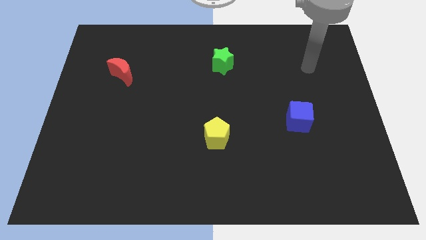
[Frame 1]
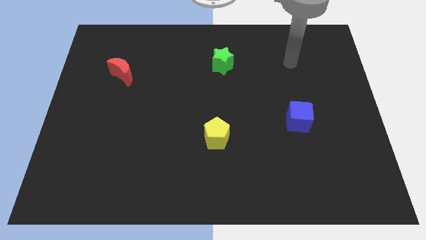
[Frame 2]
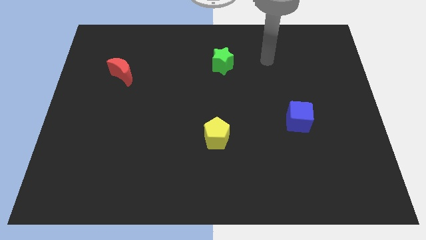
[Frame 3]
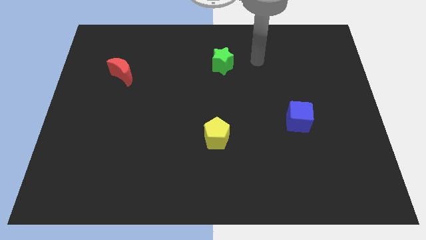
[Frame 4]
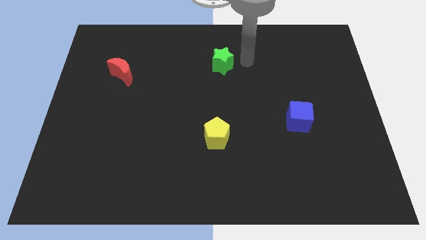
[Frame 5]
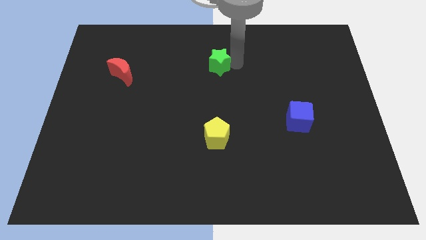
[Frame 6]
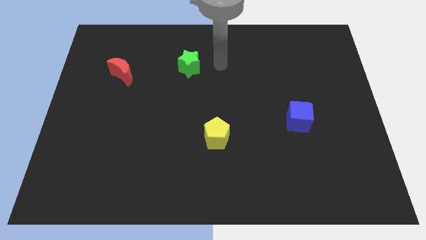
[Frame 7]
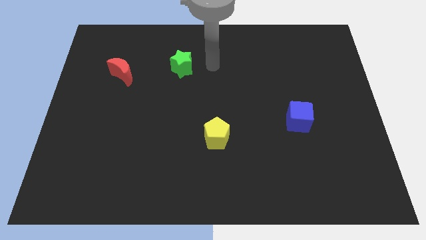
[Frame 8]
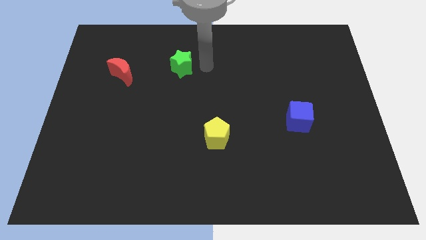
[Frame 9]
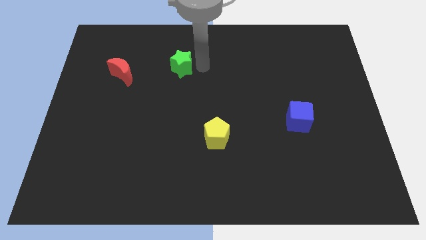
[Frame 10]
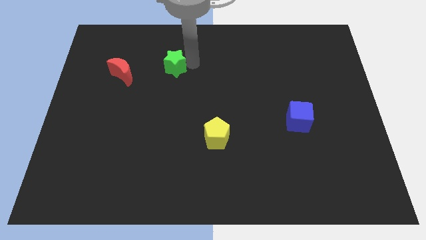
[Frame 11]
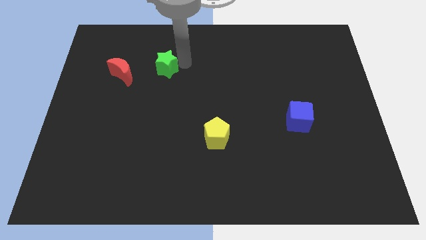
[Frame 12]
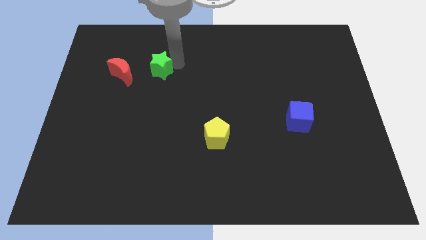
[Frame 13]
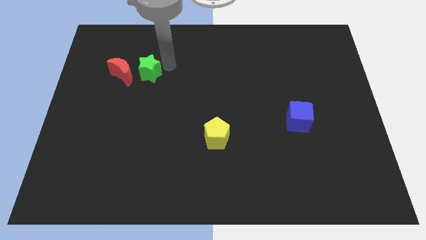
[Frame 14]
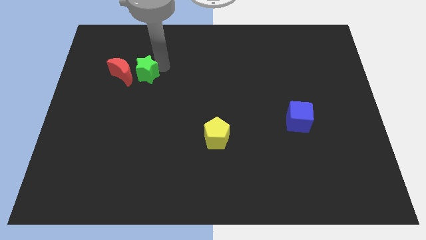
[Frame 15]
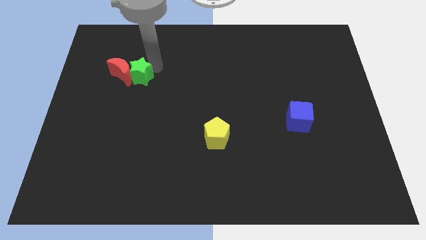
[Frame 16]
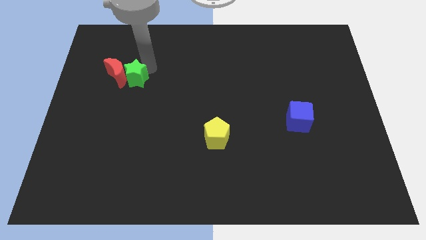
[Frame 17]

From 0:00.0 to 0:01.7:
slide the star close to the moon

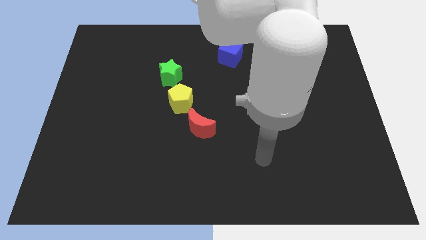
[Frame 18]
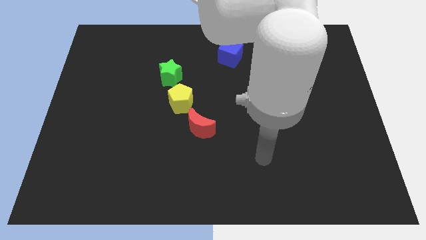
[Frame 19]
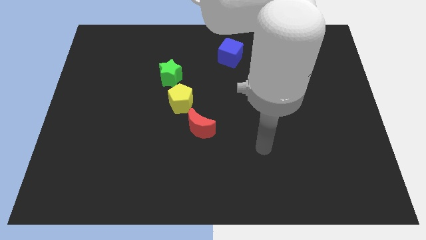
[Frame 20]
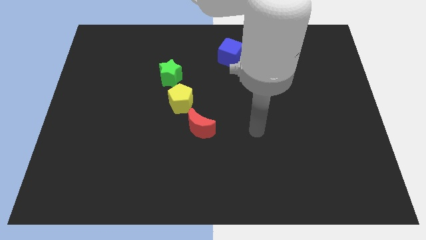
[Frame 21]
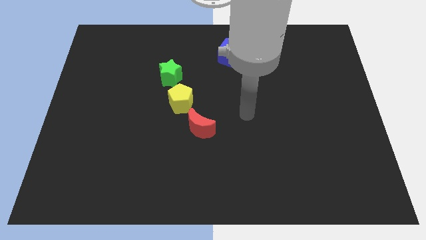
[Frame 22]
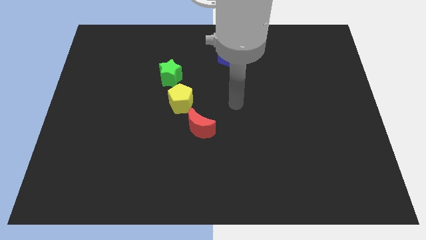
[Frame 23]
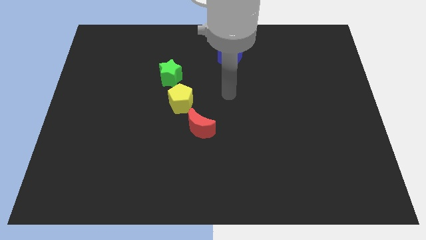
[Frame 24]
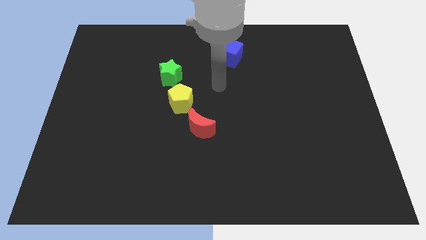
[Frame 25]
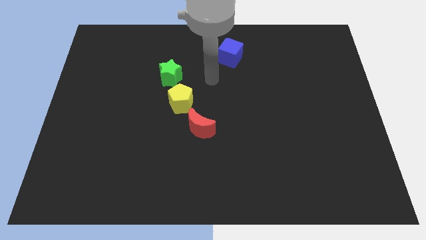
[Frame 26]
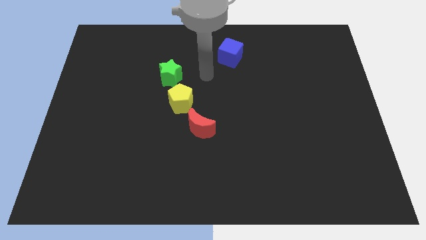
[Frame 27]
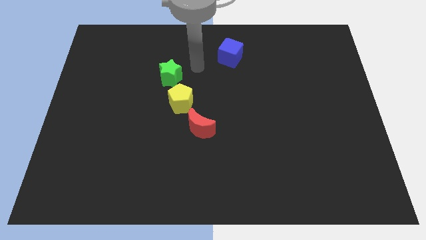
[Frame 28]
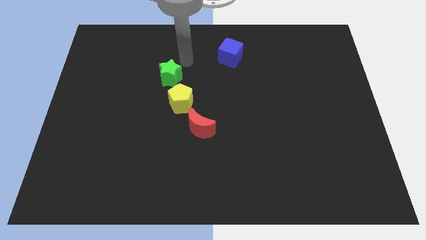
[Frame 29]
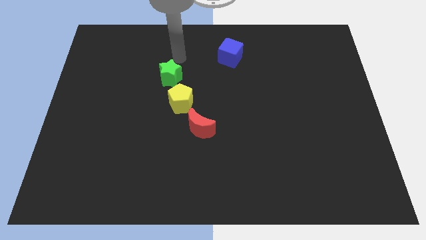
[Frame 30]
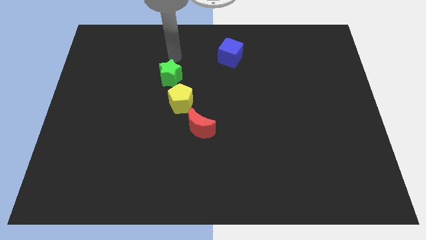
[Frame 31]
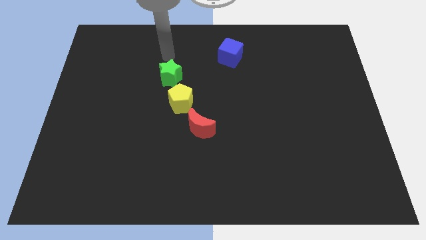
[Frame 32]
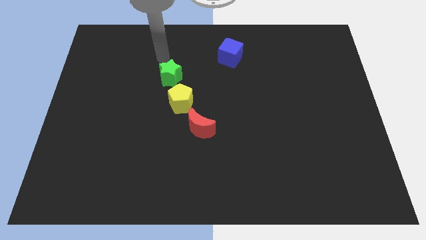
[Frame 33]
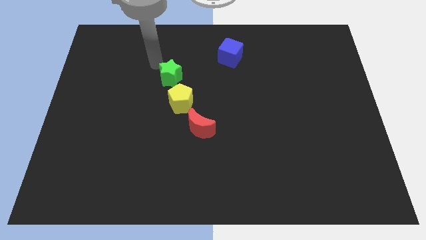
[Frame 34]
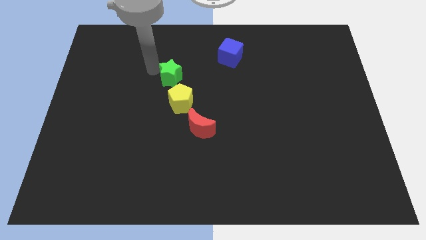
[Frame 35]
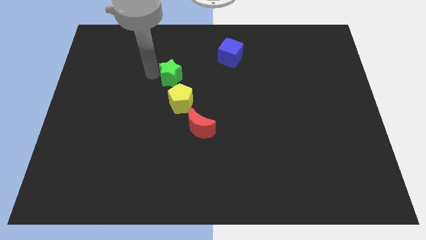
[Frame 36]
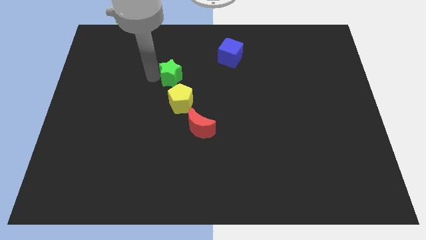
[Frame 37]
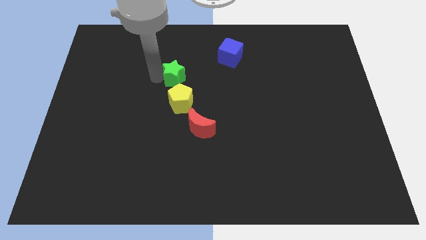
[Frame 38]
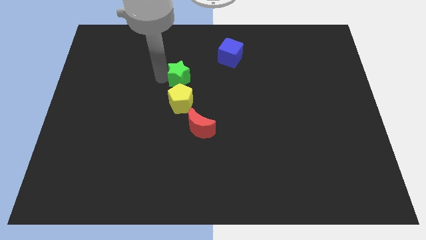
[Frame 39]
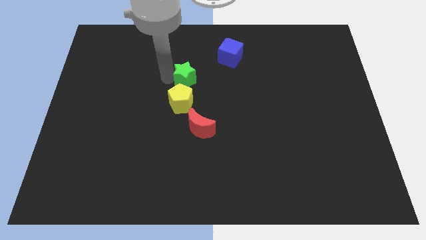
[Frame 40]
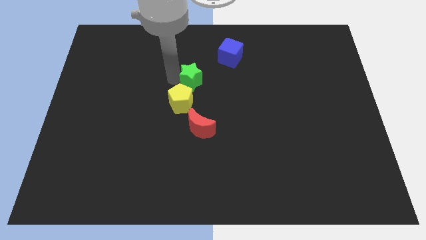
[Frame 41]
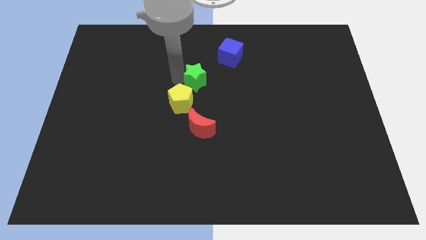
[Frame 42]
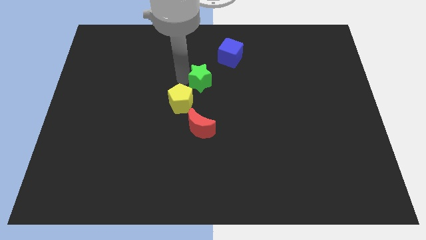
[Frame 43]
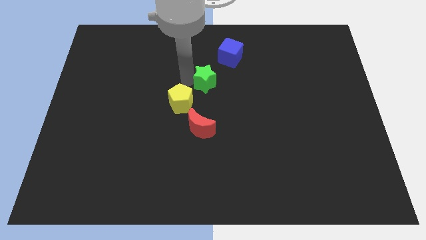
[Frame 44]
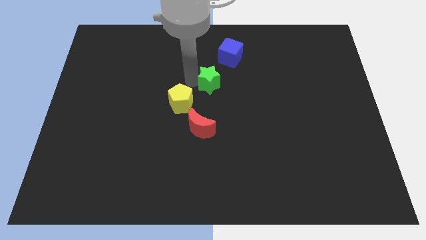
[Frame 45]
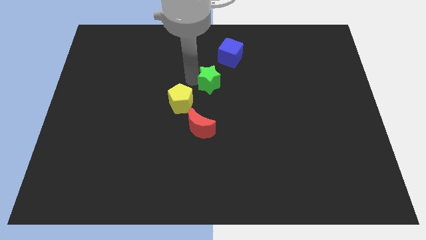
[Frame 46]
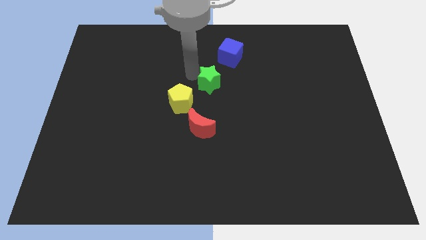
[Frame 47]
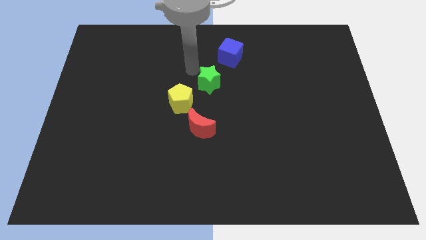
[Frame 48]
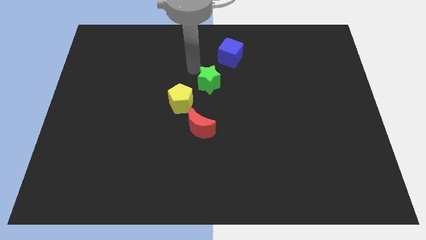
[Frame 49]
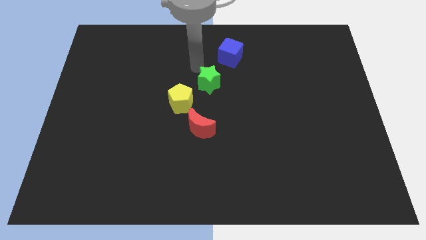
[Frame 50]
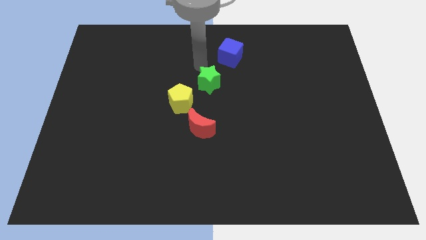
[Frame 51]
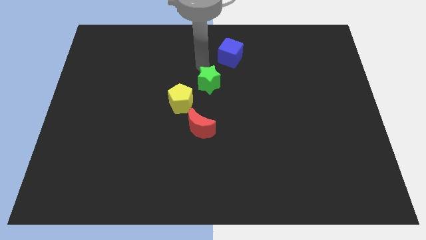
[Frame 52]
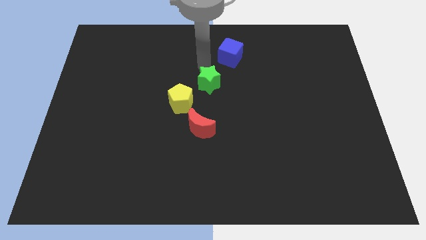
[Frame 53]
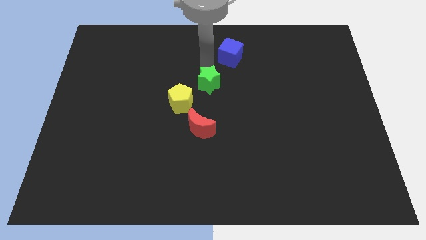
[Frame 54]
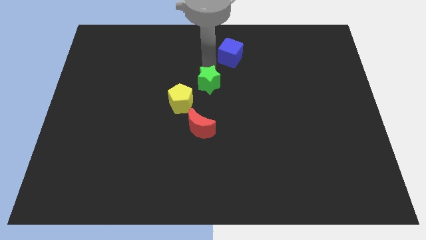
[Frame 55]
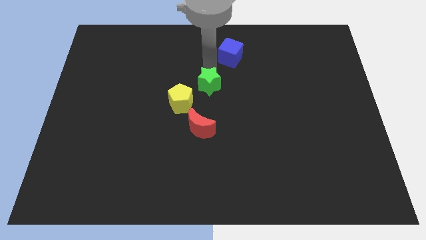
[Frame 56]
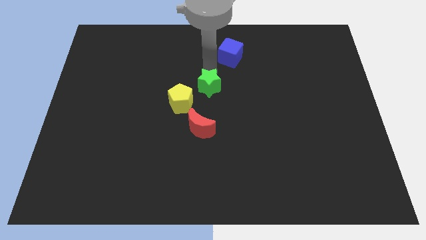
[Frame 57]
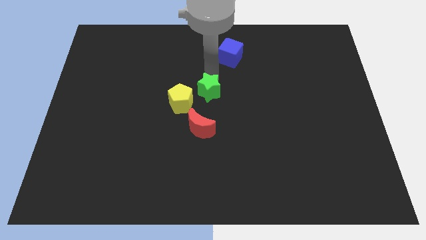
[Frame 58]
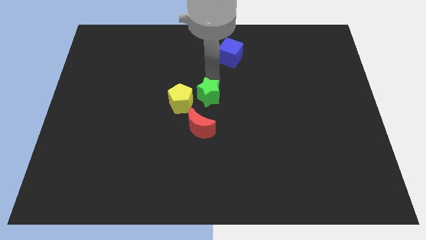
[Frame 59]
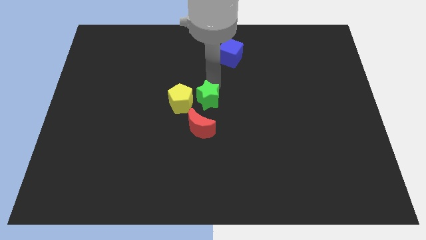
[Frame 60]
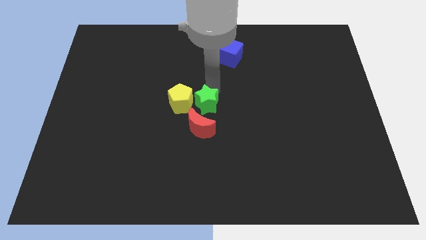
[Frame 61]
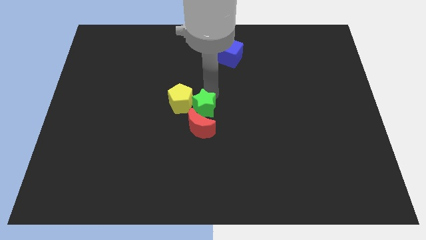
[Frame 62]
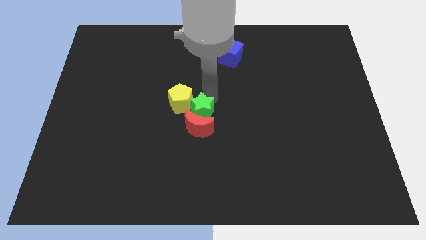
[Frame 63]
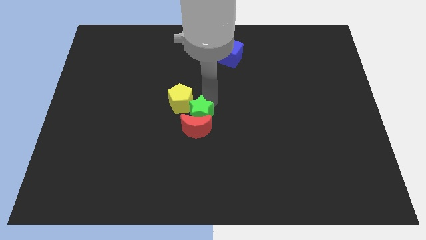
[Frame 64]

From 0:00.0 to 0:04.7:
move the green block towards the moon

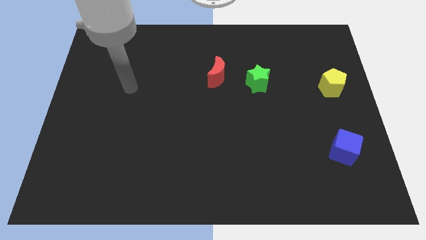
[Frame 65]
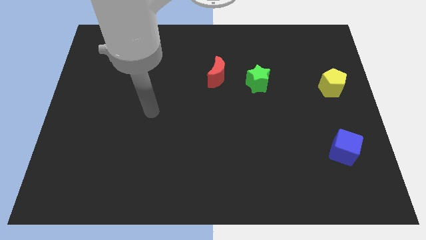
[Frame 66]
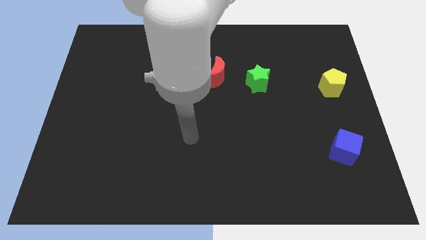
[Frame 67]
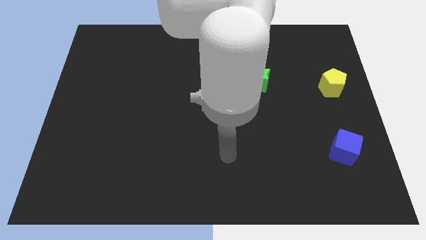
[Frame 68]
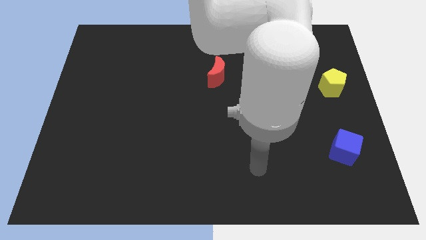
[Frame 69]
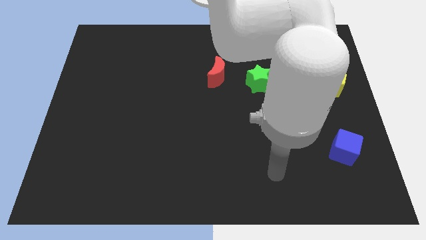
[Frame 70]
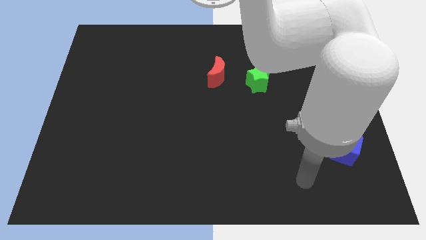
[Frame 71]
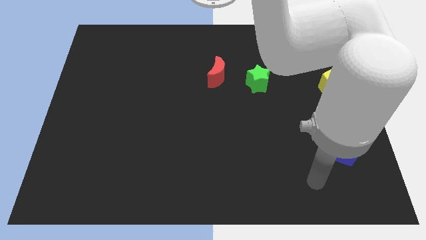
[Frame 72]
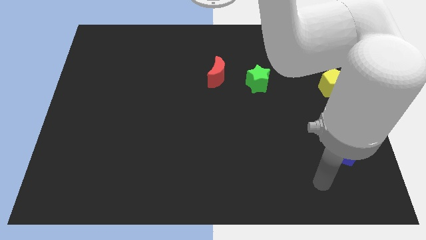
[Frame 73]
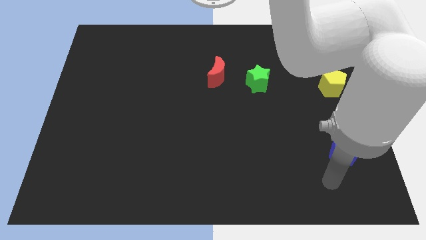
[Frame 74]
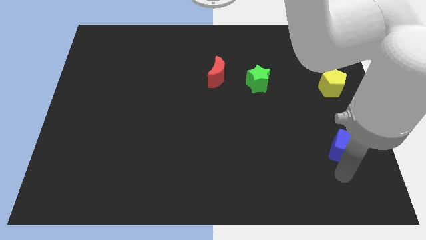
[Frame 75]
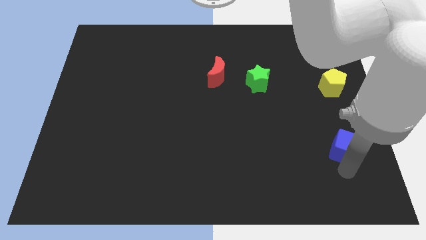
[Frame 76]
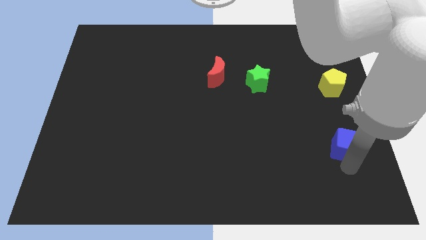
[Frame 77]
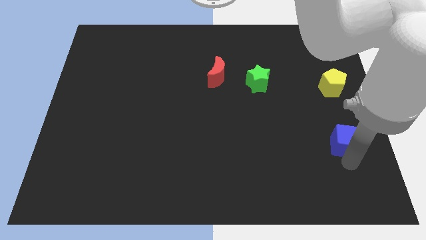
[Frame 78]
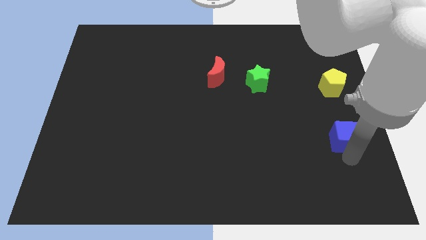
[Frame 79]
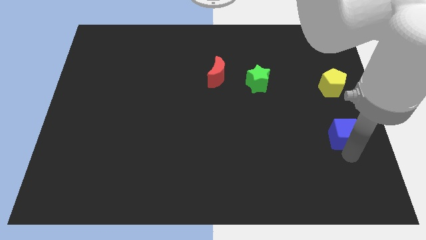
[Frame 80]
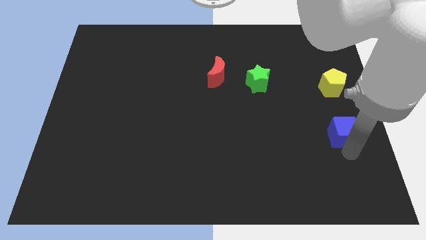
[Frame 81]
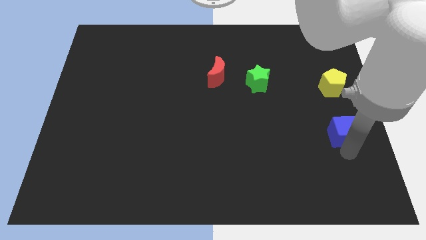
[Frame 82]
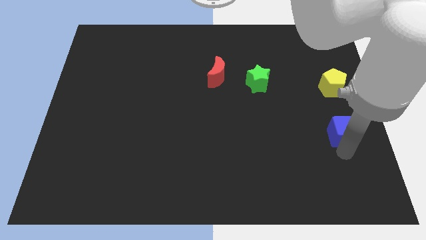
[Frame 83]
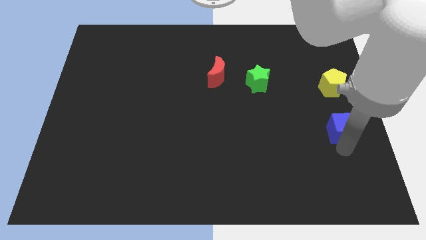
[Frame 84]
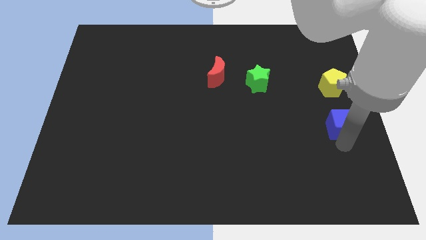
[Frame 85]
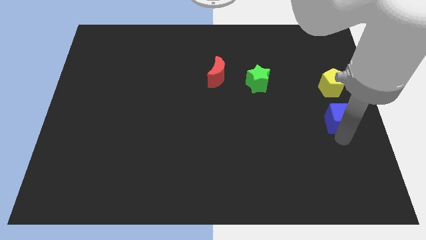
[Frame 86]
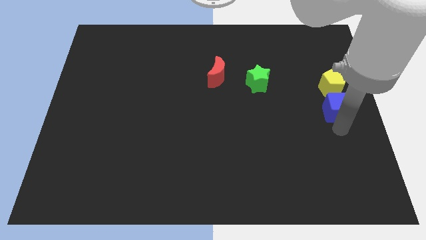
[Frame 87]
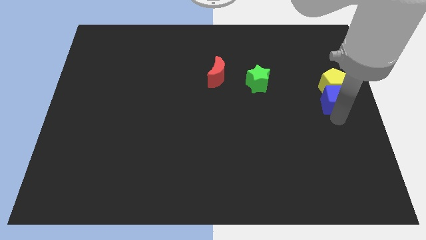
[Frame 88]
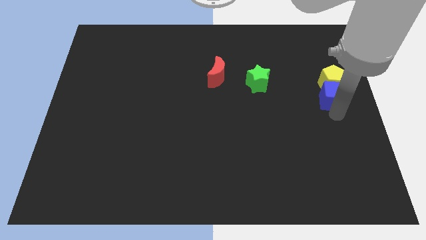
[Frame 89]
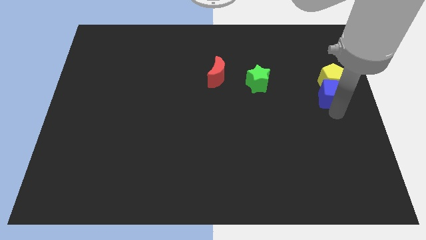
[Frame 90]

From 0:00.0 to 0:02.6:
push the blue block close to the pentagon
